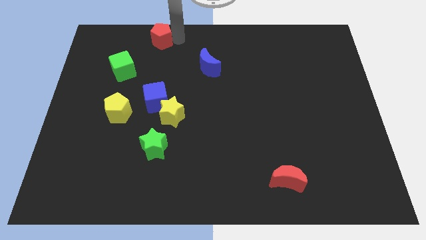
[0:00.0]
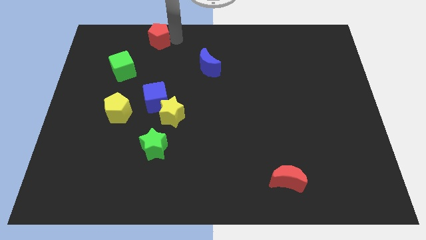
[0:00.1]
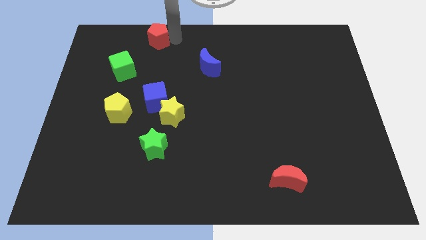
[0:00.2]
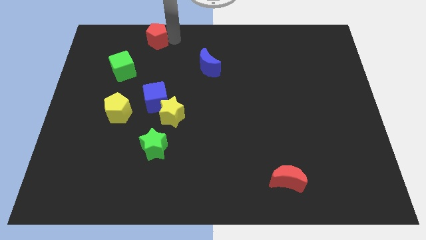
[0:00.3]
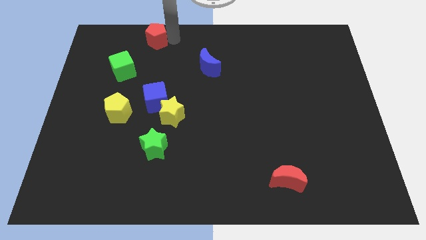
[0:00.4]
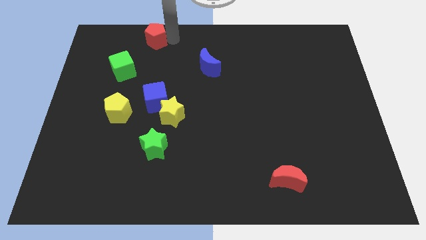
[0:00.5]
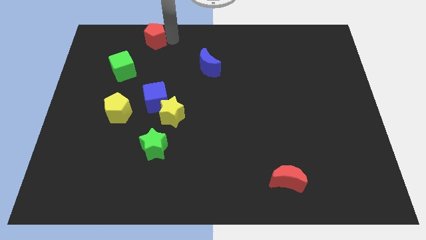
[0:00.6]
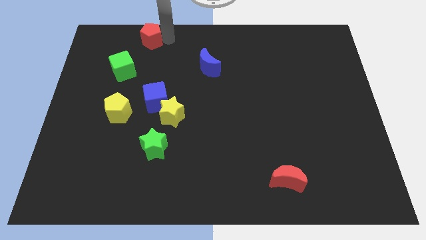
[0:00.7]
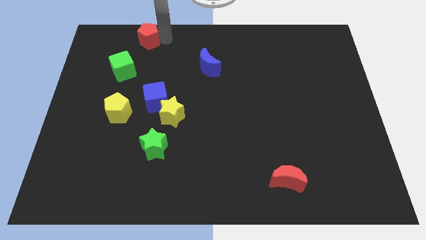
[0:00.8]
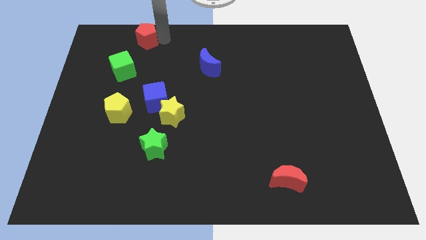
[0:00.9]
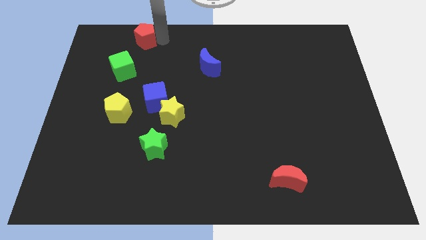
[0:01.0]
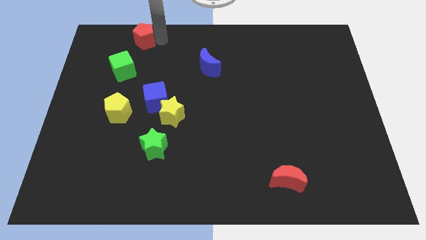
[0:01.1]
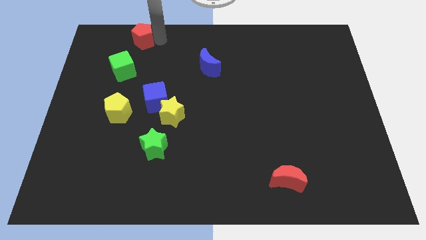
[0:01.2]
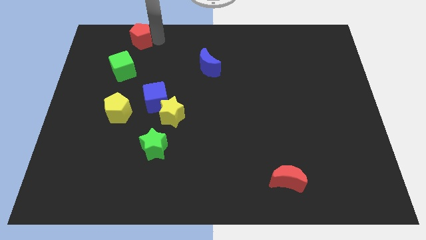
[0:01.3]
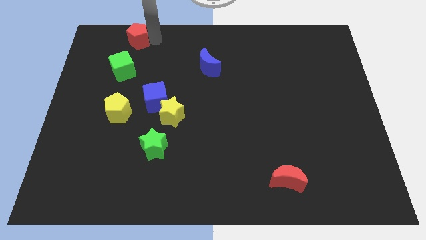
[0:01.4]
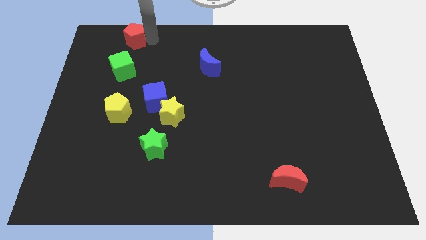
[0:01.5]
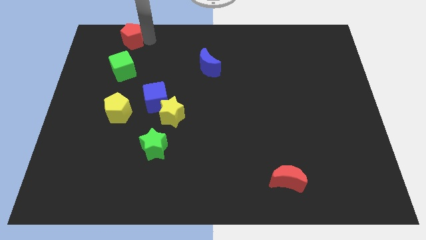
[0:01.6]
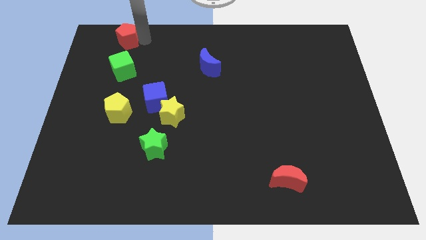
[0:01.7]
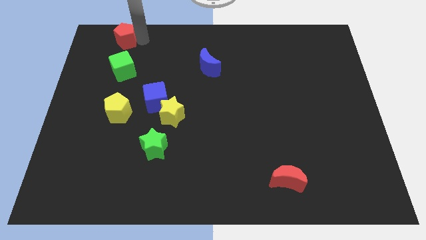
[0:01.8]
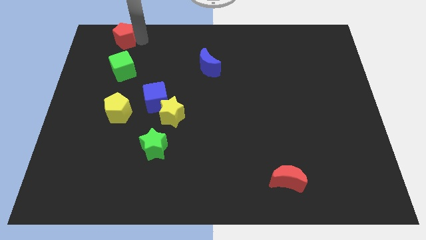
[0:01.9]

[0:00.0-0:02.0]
place the red pentagon to the top side of the green cube

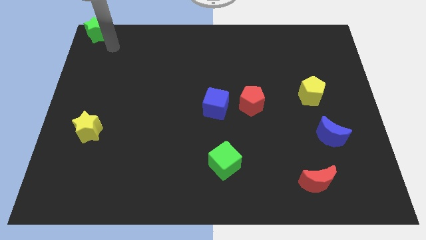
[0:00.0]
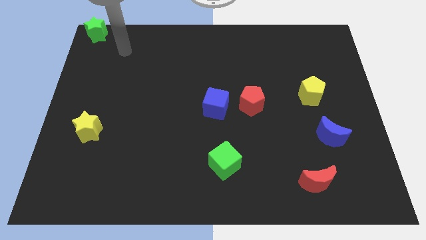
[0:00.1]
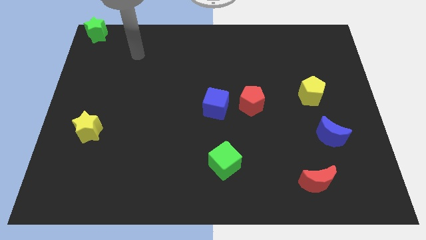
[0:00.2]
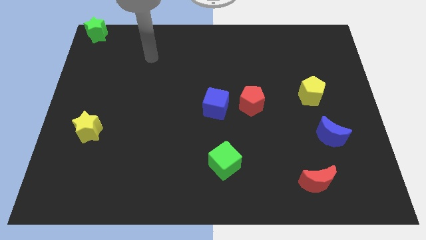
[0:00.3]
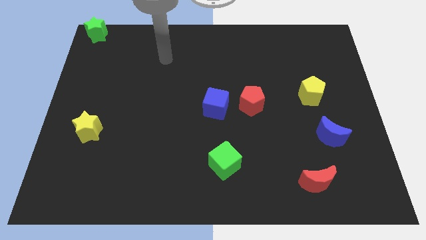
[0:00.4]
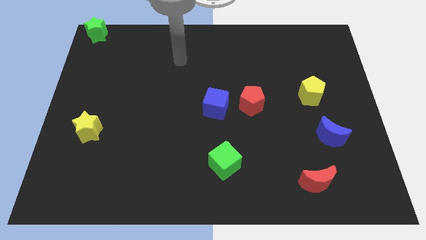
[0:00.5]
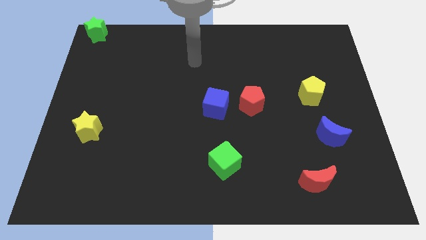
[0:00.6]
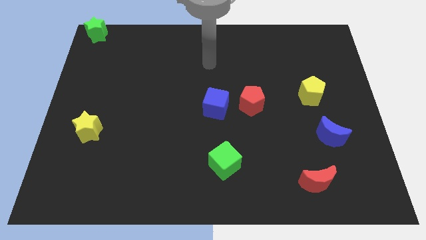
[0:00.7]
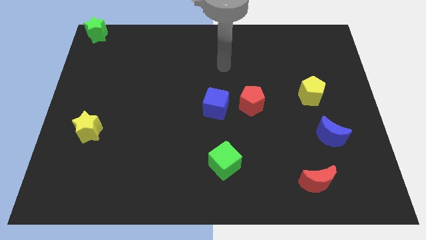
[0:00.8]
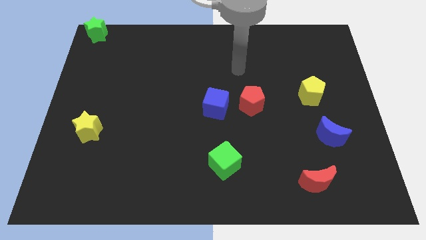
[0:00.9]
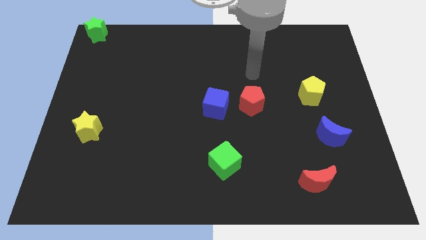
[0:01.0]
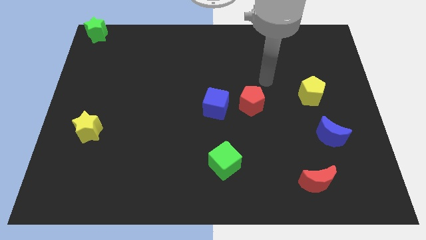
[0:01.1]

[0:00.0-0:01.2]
move arm away from green star

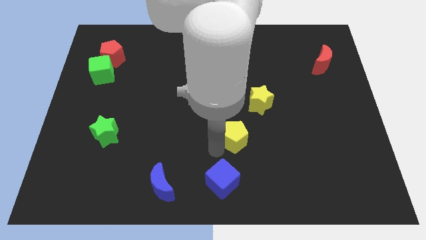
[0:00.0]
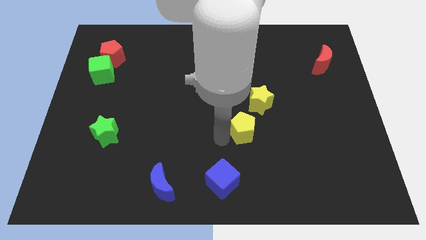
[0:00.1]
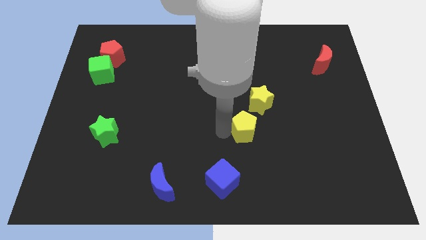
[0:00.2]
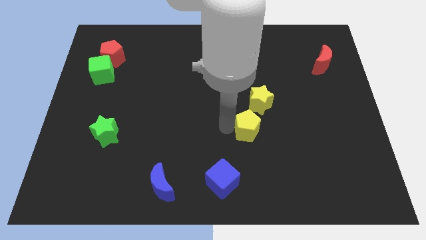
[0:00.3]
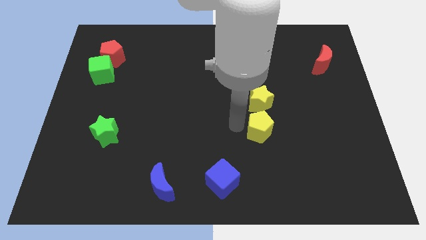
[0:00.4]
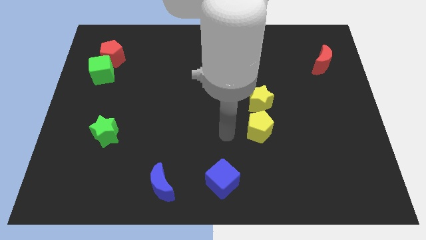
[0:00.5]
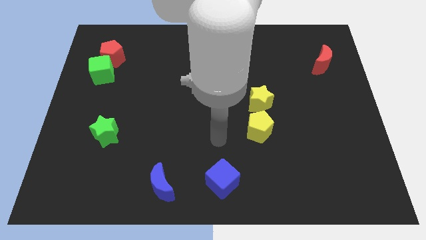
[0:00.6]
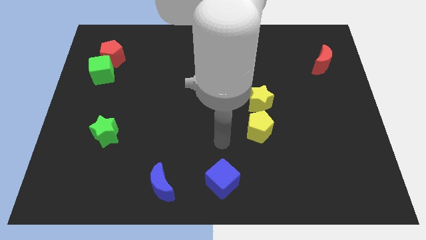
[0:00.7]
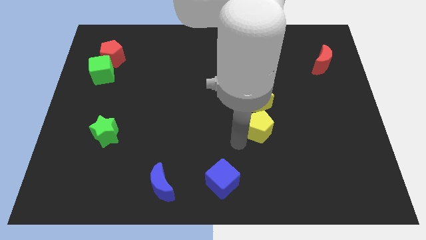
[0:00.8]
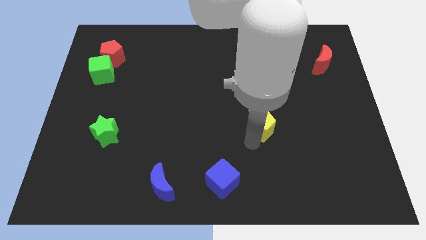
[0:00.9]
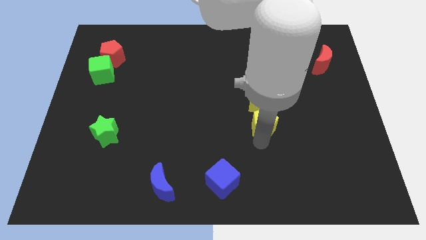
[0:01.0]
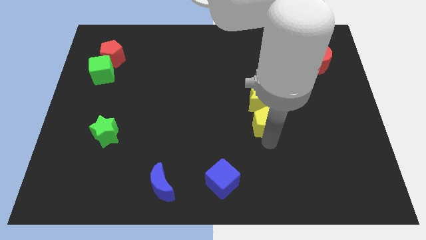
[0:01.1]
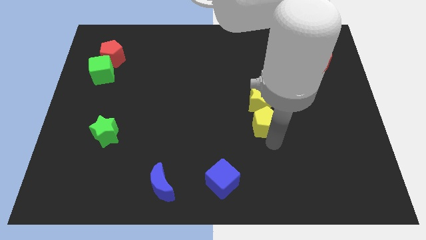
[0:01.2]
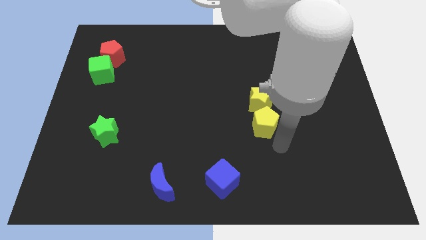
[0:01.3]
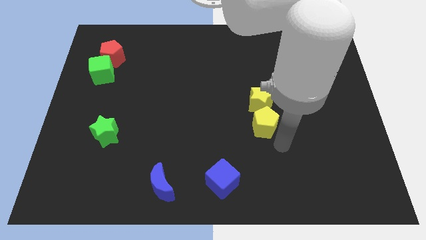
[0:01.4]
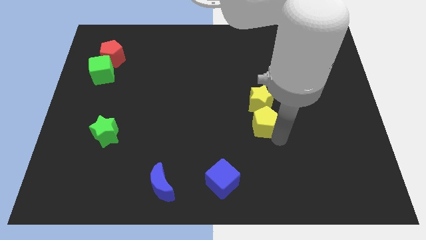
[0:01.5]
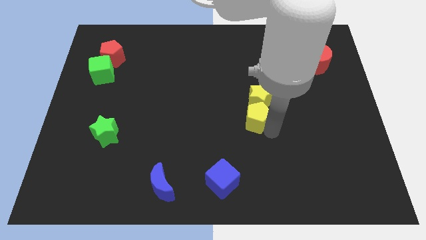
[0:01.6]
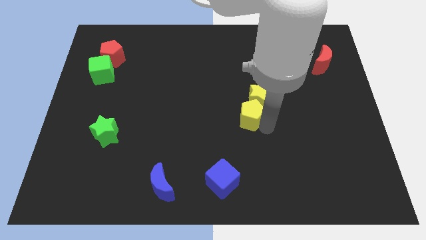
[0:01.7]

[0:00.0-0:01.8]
push the yellow pentagon into yellow star

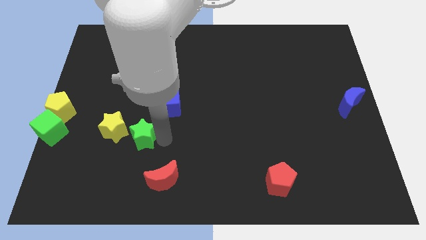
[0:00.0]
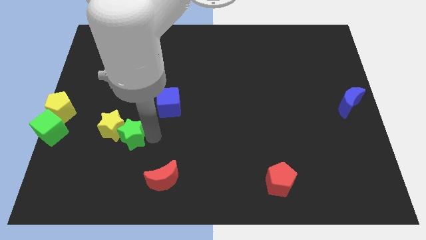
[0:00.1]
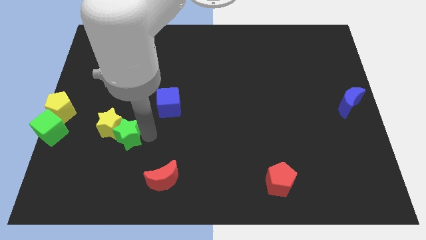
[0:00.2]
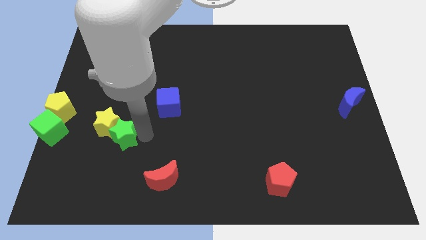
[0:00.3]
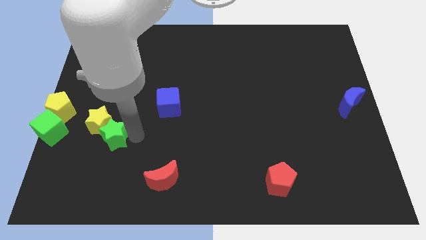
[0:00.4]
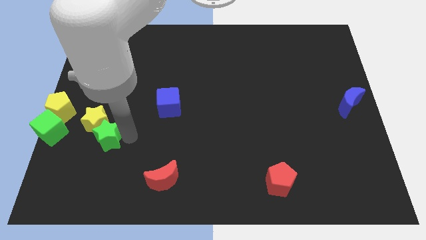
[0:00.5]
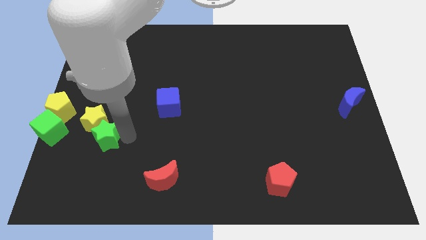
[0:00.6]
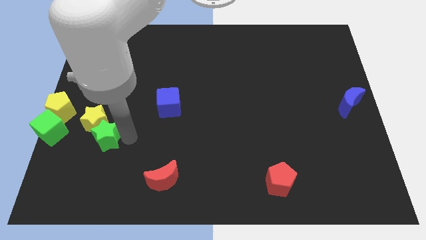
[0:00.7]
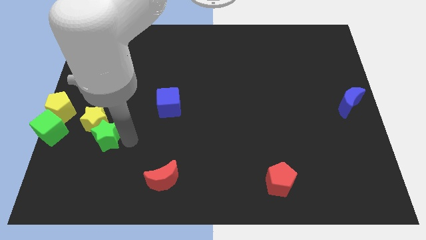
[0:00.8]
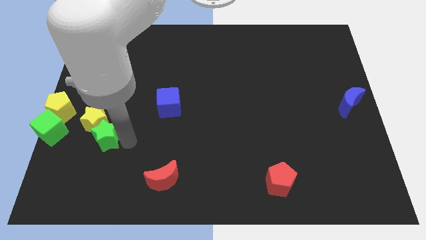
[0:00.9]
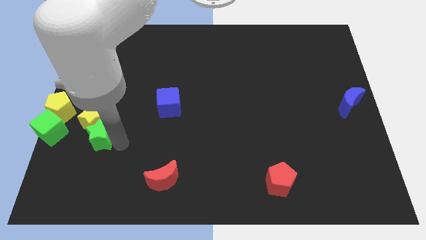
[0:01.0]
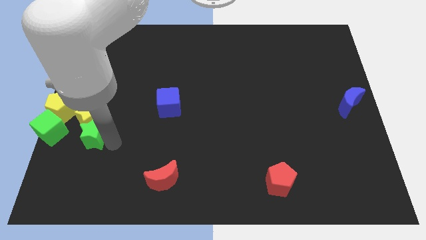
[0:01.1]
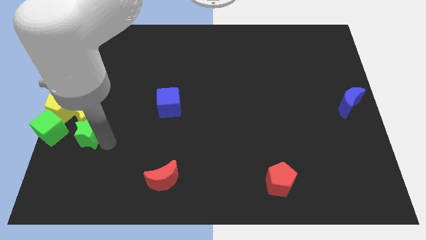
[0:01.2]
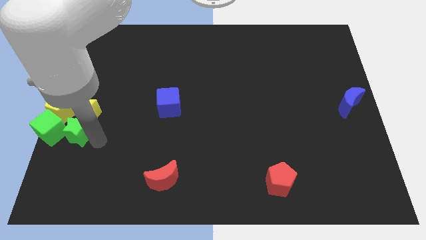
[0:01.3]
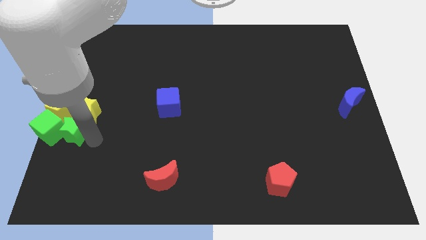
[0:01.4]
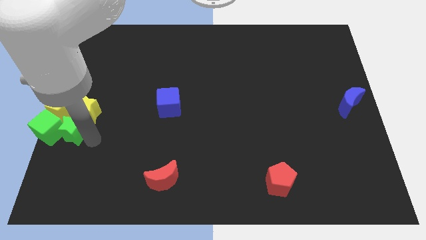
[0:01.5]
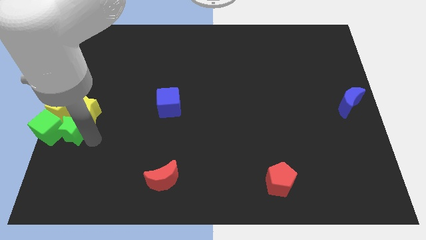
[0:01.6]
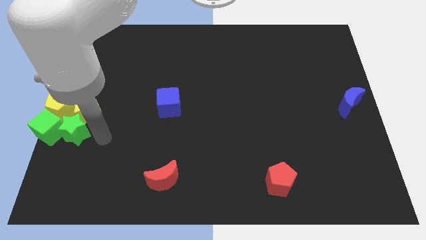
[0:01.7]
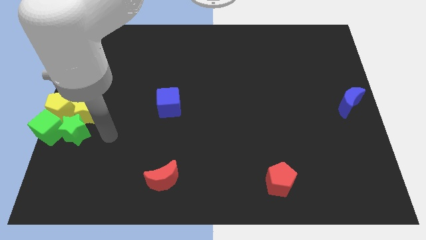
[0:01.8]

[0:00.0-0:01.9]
push the yellow star along with the green star to the left center of the board

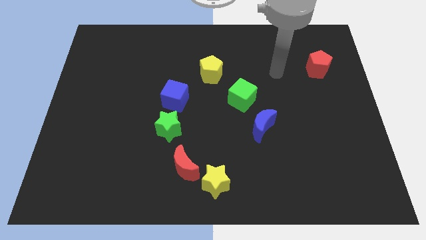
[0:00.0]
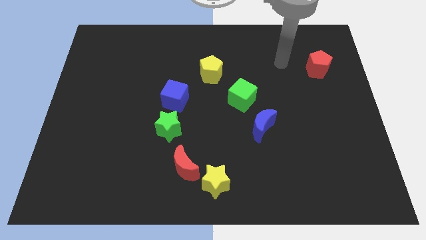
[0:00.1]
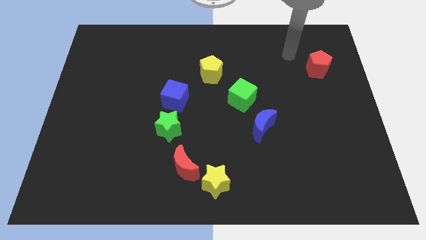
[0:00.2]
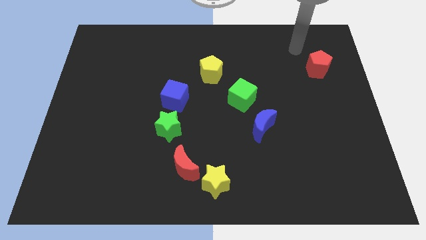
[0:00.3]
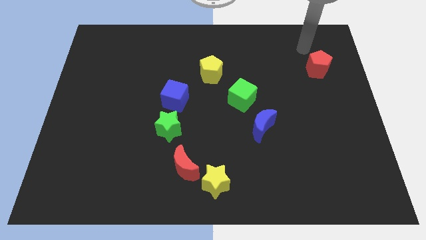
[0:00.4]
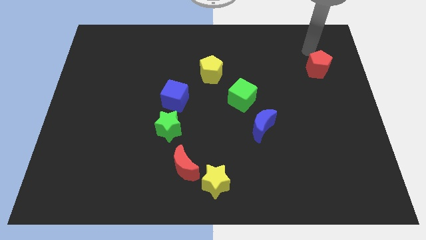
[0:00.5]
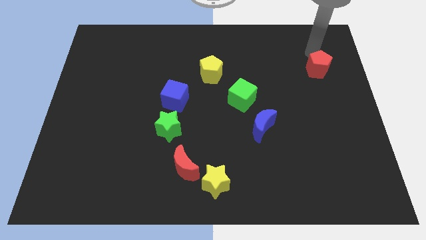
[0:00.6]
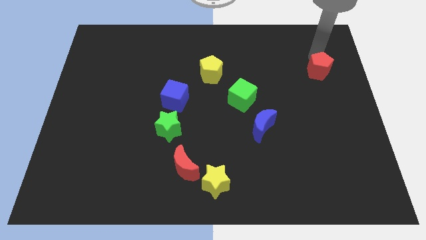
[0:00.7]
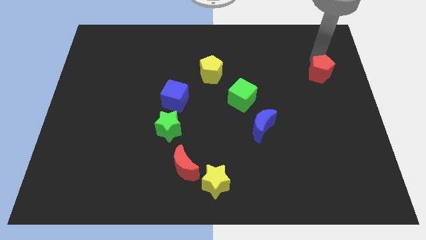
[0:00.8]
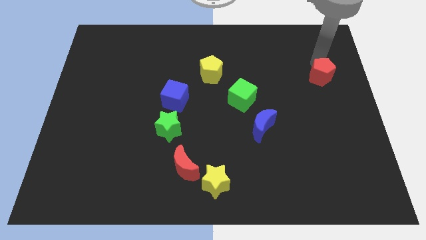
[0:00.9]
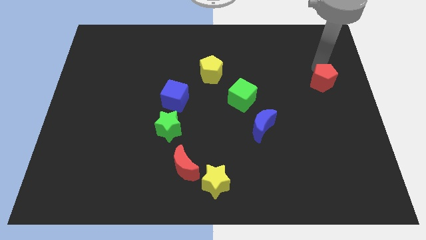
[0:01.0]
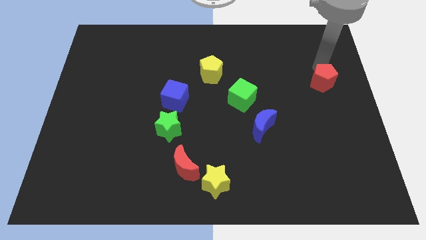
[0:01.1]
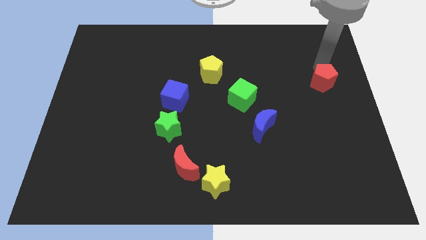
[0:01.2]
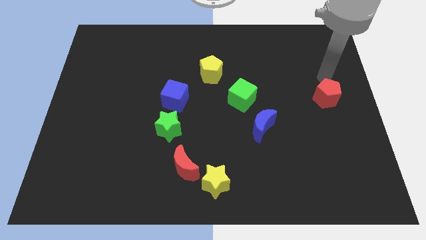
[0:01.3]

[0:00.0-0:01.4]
slide the red pentagon parallel to the right of green cube

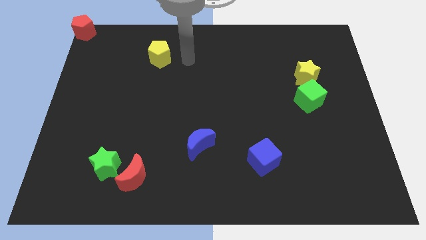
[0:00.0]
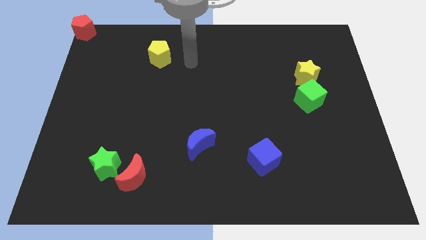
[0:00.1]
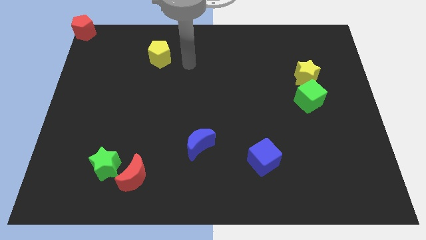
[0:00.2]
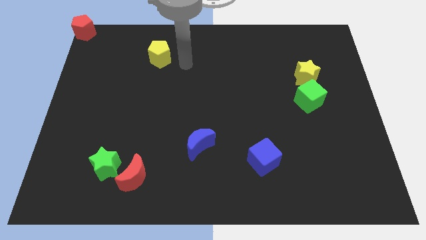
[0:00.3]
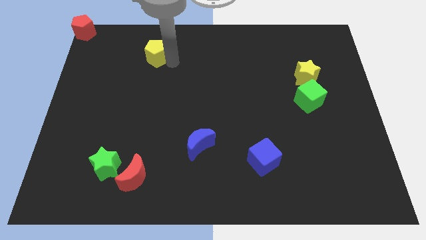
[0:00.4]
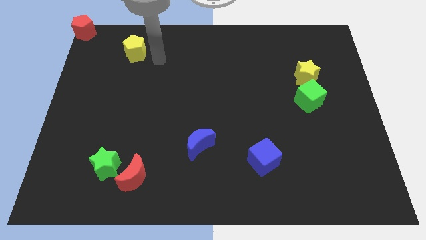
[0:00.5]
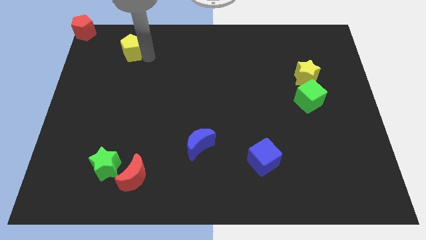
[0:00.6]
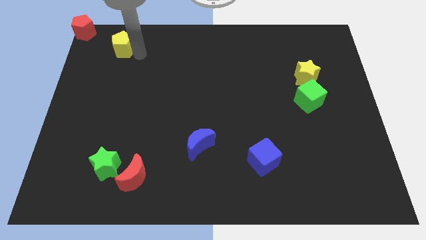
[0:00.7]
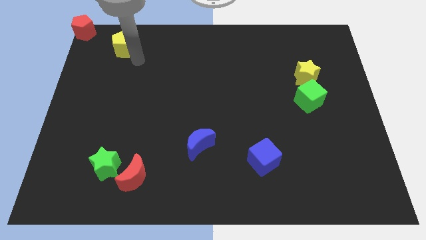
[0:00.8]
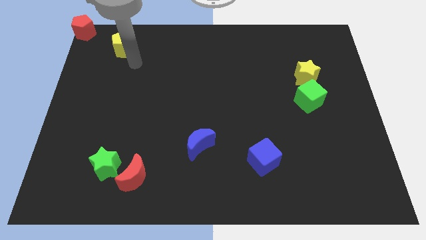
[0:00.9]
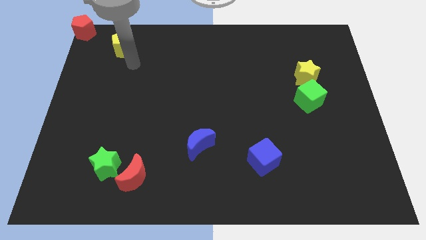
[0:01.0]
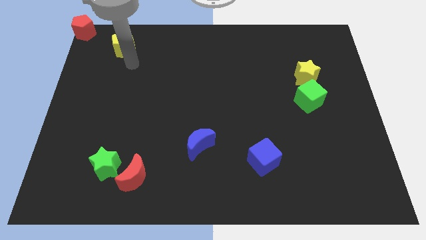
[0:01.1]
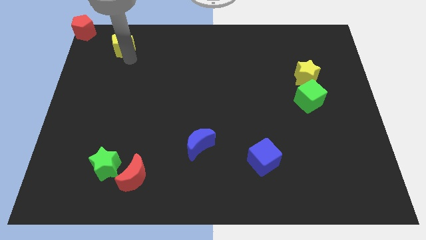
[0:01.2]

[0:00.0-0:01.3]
push the yellow pentagon to the top of the green star
